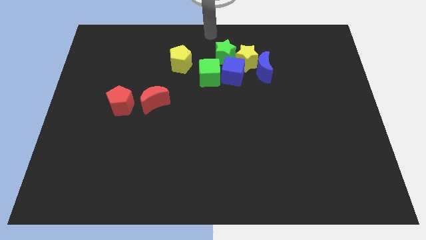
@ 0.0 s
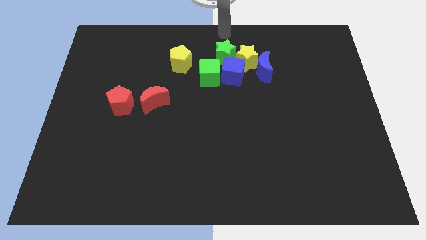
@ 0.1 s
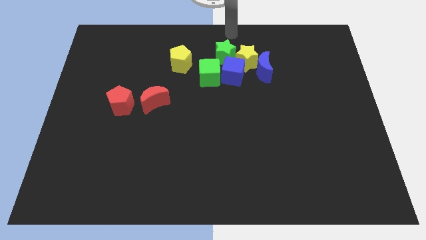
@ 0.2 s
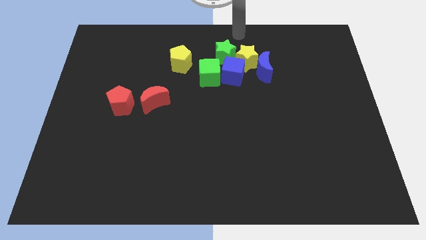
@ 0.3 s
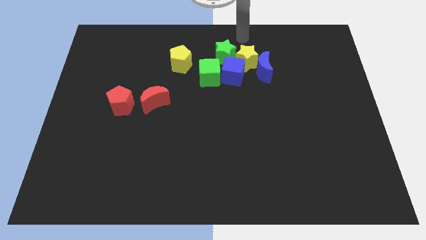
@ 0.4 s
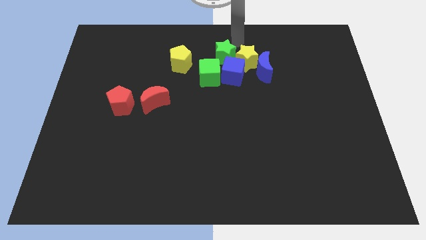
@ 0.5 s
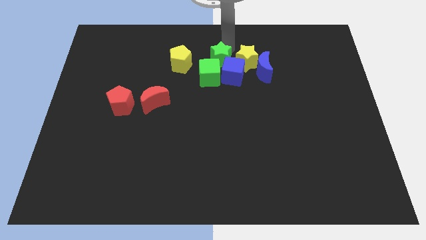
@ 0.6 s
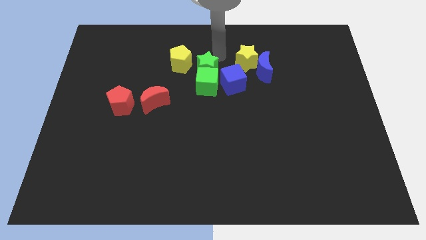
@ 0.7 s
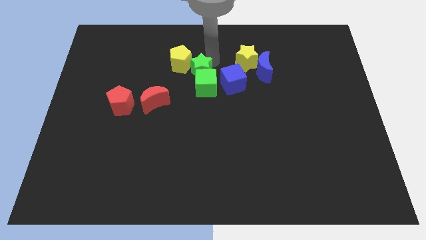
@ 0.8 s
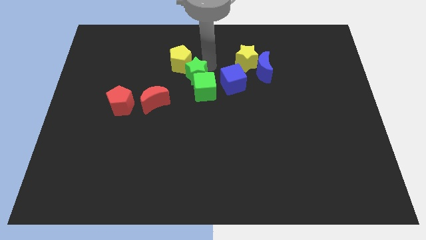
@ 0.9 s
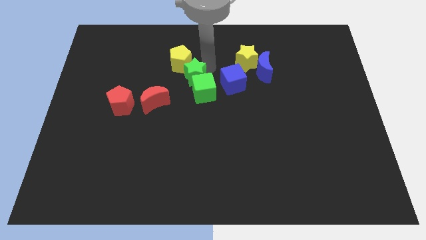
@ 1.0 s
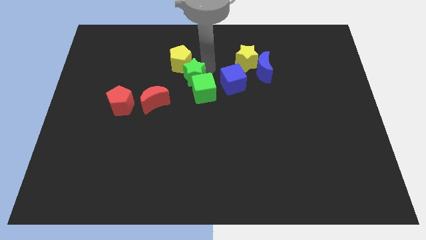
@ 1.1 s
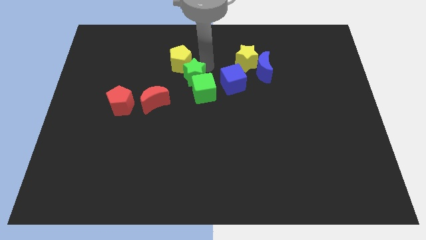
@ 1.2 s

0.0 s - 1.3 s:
slide the green star into the green cube

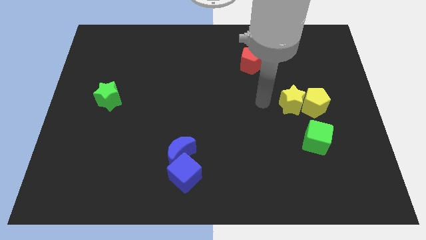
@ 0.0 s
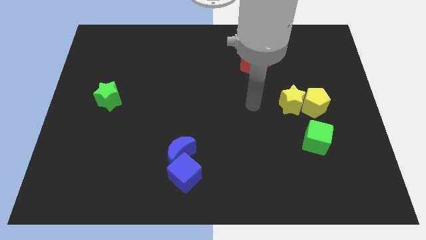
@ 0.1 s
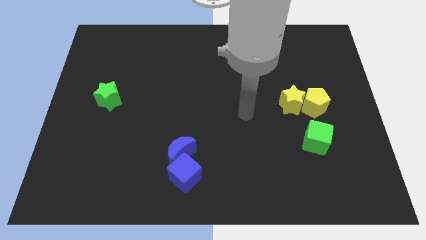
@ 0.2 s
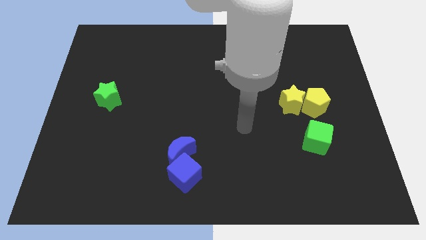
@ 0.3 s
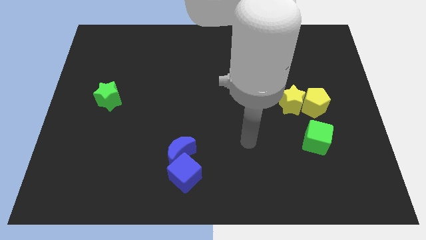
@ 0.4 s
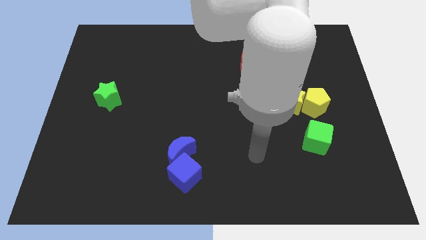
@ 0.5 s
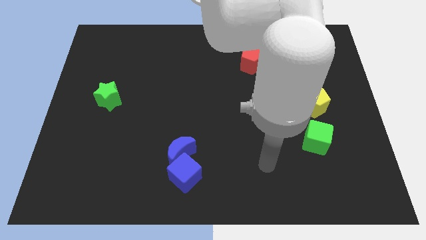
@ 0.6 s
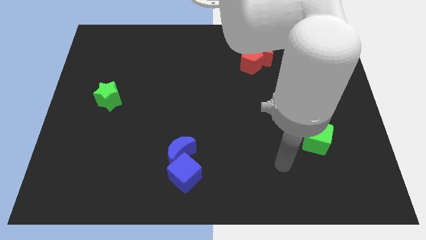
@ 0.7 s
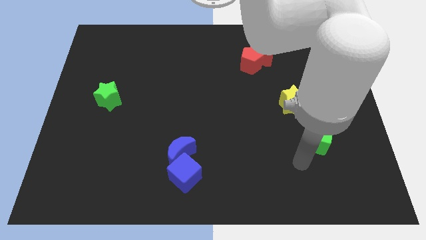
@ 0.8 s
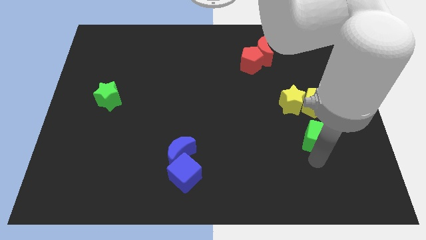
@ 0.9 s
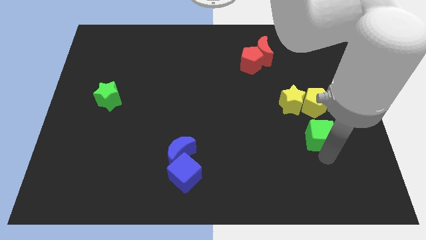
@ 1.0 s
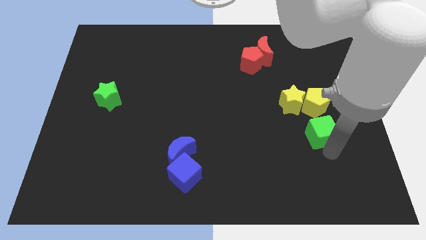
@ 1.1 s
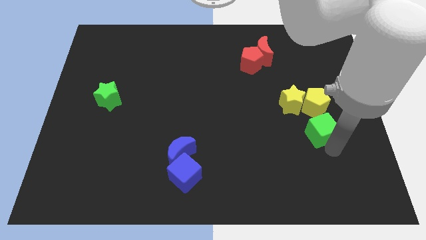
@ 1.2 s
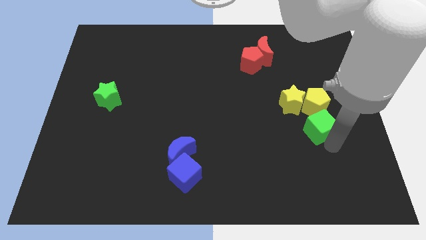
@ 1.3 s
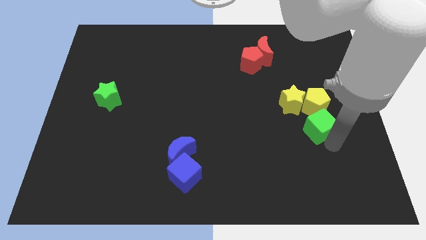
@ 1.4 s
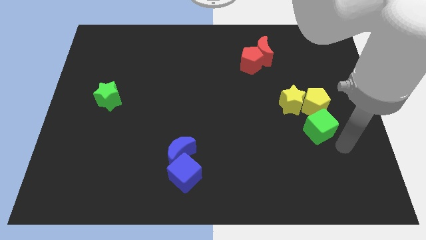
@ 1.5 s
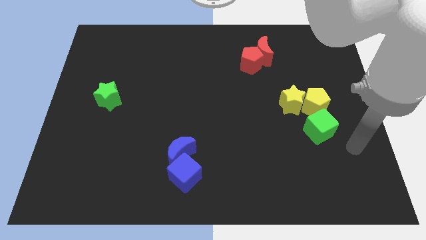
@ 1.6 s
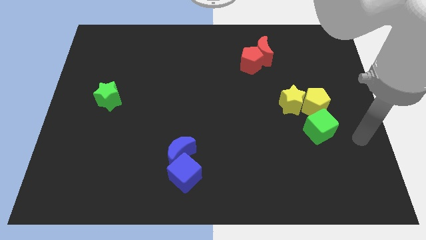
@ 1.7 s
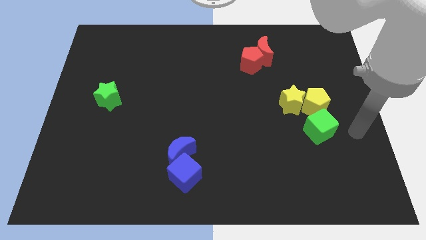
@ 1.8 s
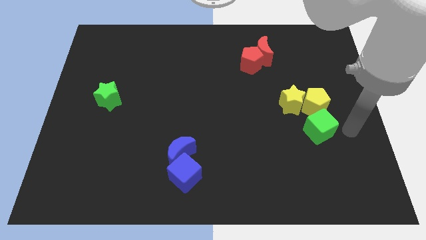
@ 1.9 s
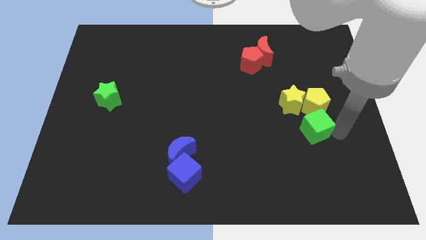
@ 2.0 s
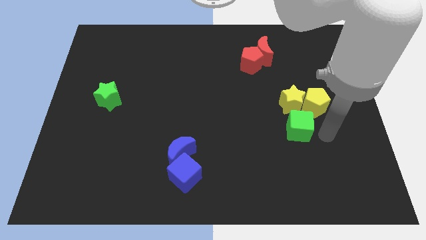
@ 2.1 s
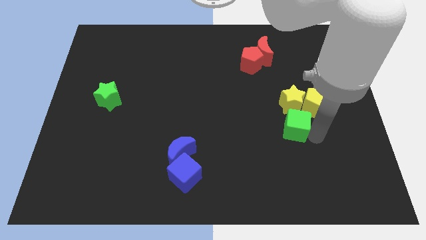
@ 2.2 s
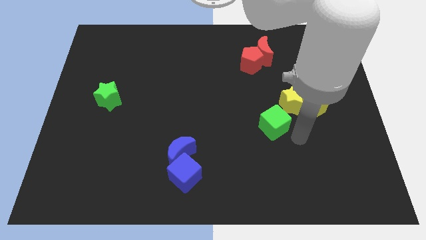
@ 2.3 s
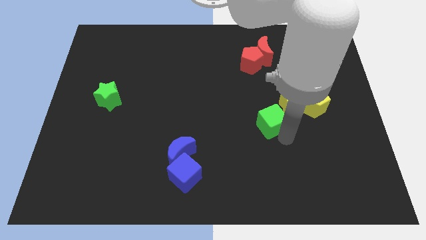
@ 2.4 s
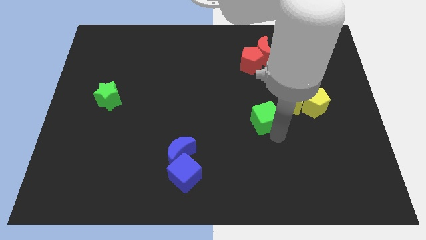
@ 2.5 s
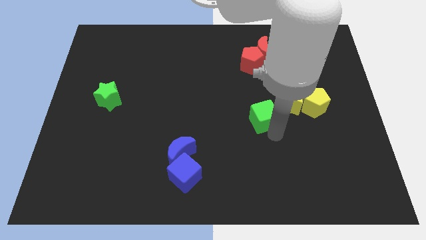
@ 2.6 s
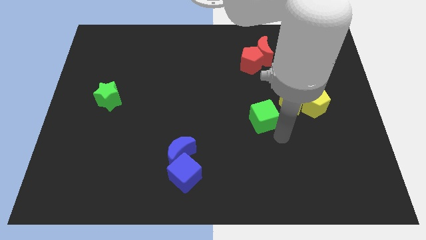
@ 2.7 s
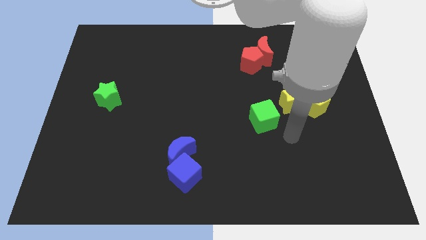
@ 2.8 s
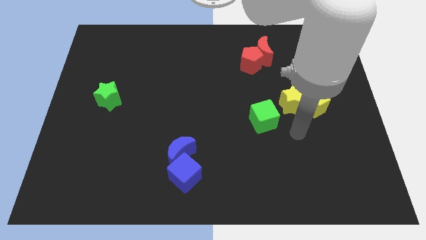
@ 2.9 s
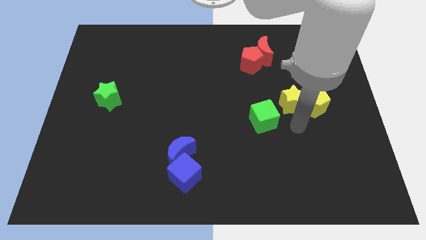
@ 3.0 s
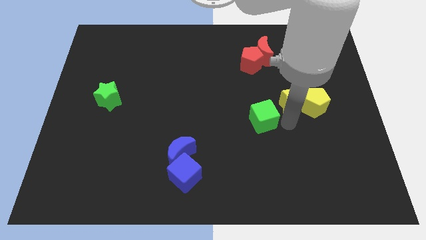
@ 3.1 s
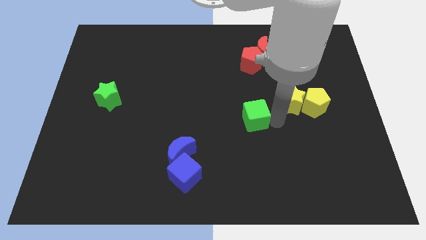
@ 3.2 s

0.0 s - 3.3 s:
move green cube towards the center

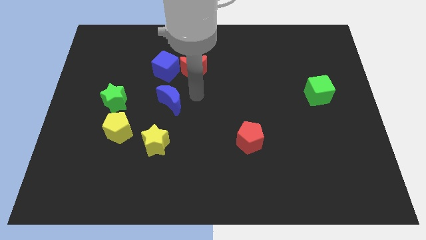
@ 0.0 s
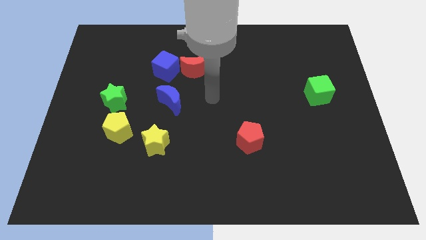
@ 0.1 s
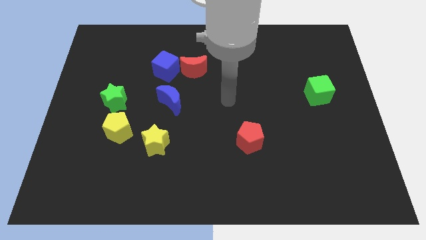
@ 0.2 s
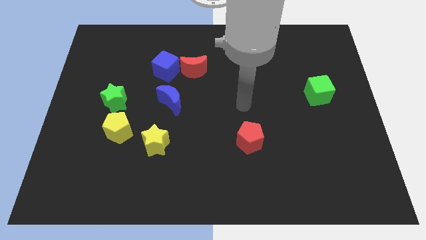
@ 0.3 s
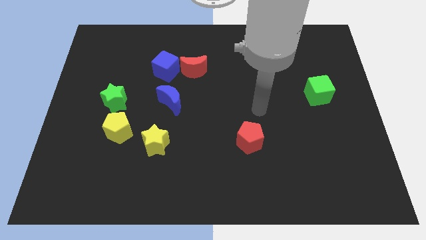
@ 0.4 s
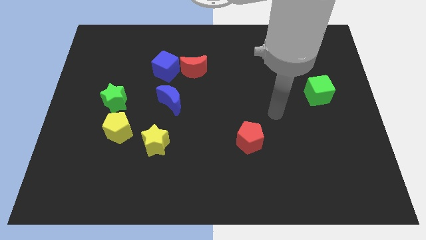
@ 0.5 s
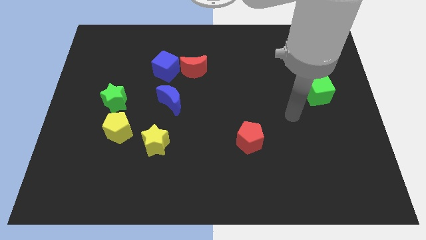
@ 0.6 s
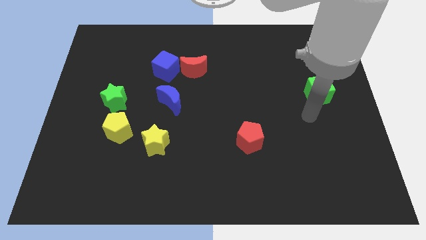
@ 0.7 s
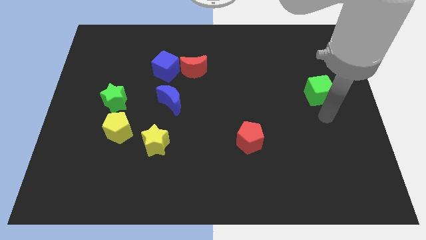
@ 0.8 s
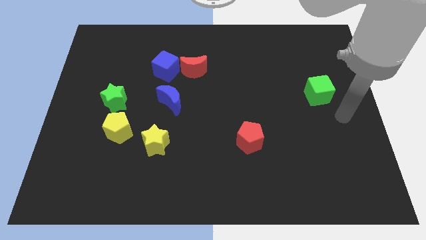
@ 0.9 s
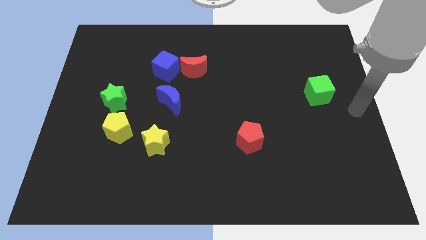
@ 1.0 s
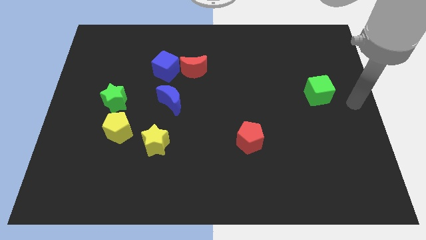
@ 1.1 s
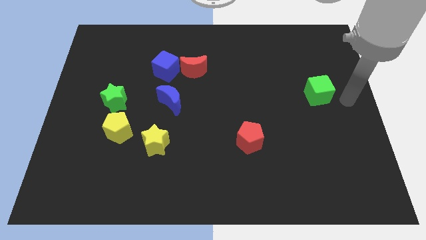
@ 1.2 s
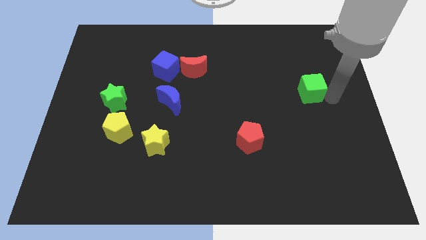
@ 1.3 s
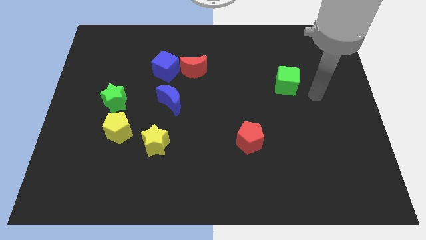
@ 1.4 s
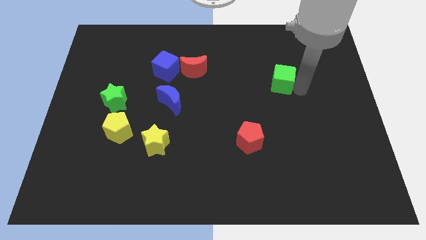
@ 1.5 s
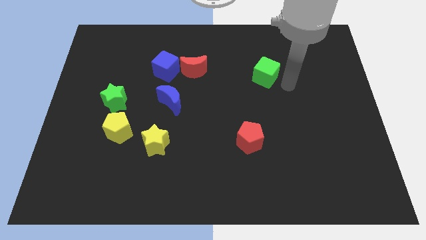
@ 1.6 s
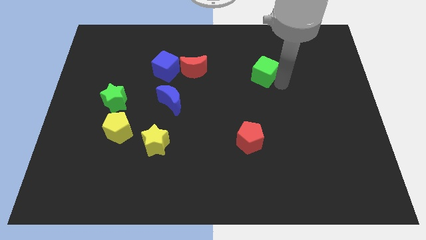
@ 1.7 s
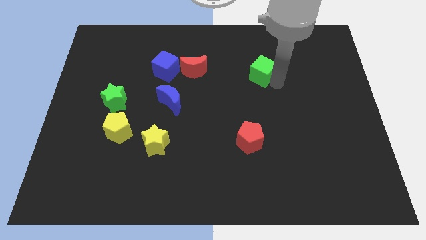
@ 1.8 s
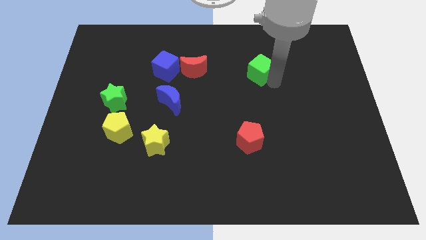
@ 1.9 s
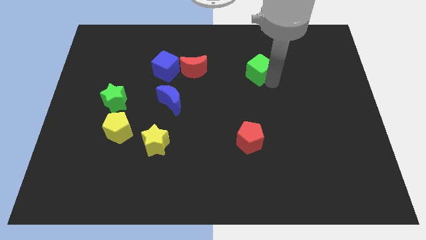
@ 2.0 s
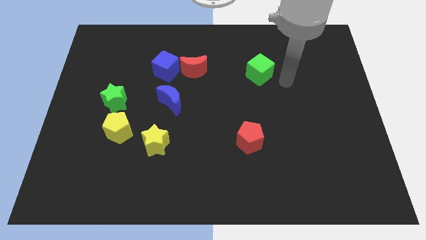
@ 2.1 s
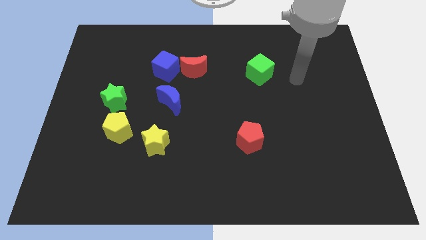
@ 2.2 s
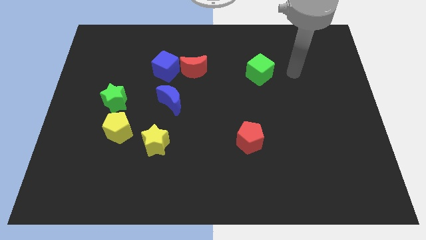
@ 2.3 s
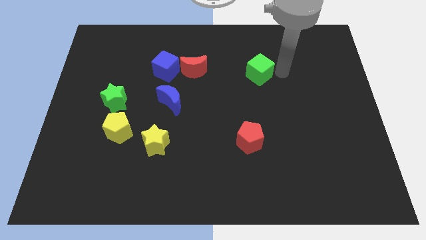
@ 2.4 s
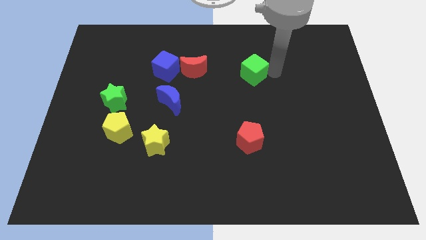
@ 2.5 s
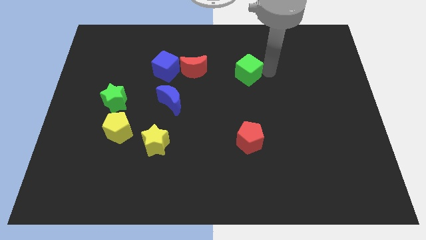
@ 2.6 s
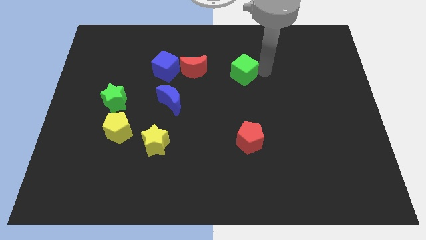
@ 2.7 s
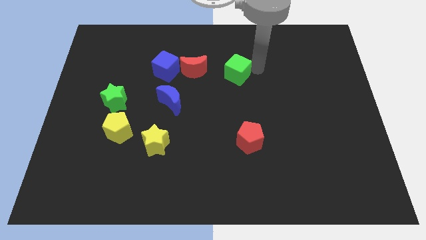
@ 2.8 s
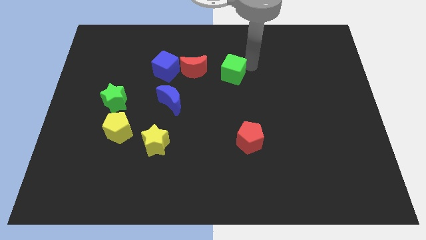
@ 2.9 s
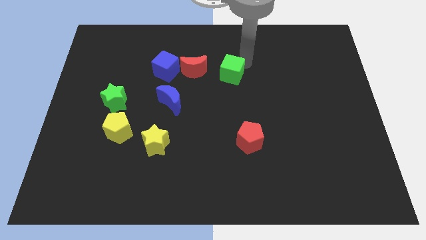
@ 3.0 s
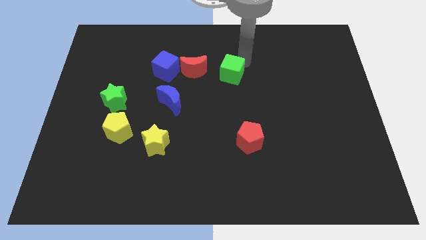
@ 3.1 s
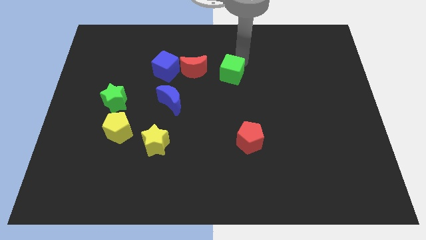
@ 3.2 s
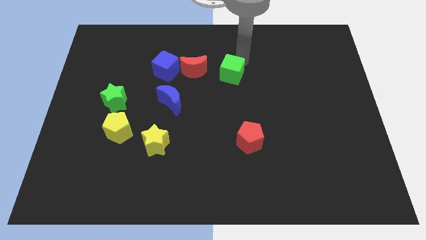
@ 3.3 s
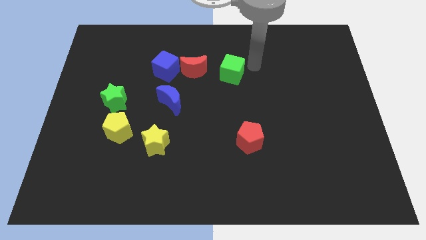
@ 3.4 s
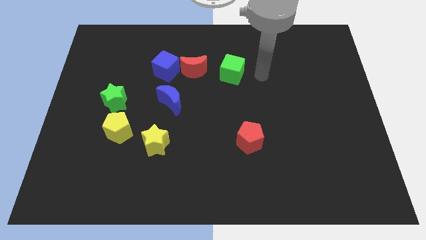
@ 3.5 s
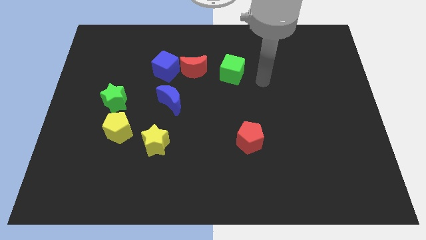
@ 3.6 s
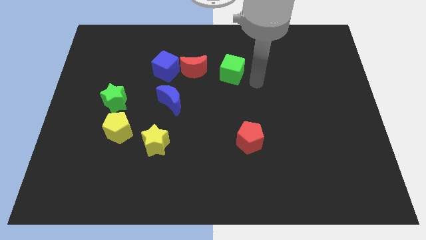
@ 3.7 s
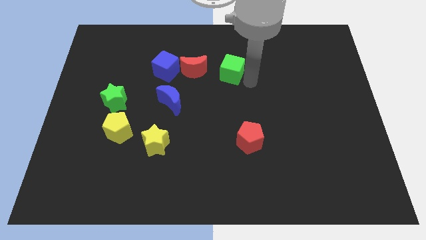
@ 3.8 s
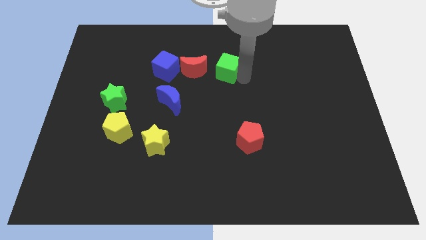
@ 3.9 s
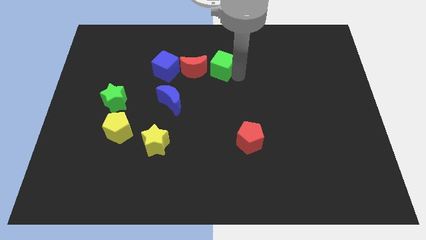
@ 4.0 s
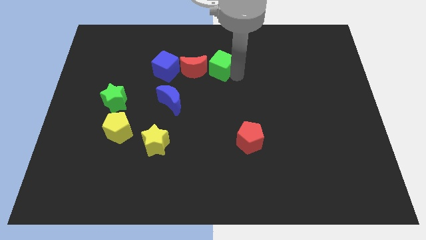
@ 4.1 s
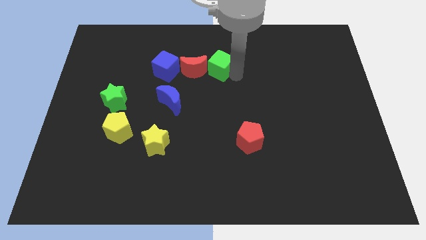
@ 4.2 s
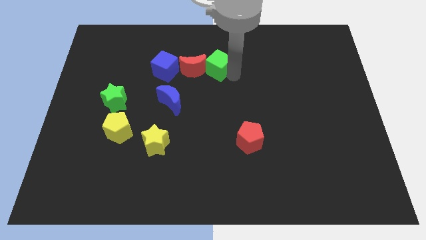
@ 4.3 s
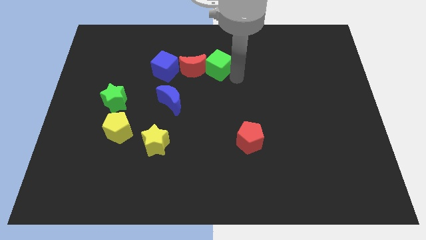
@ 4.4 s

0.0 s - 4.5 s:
push the green cube into the red moon
